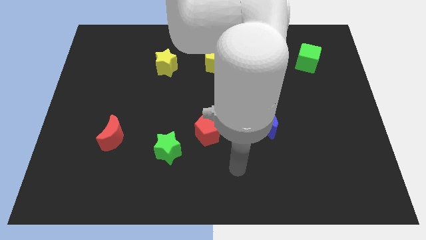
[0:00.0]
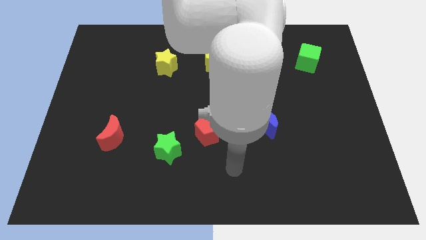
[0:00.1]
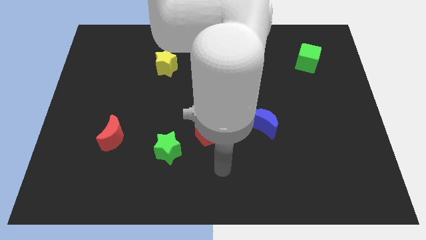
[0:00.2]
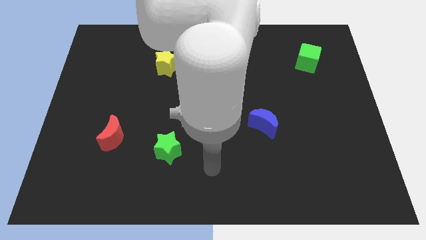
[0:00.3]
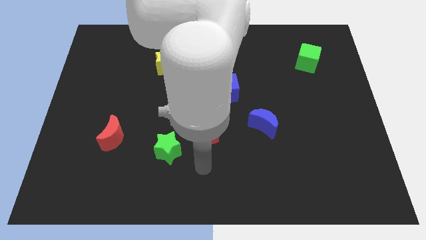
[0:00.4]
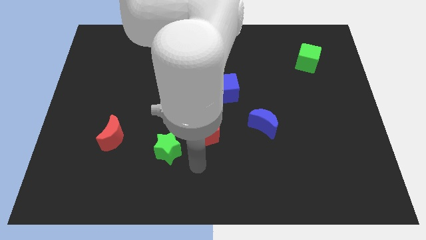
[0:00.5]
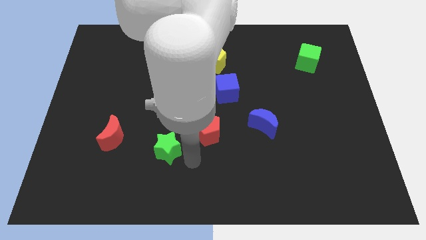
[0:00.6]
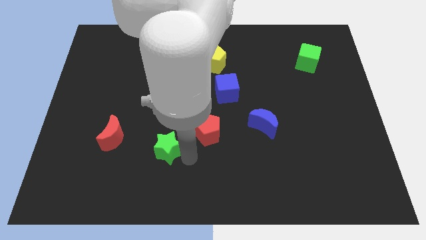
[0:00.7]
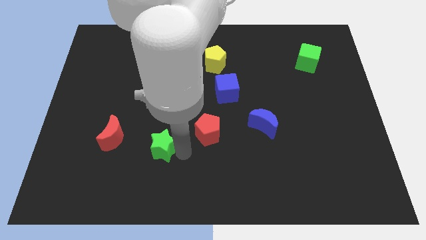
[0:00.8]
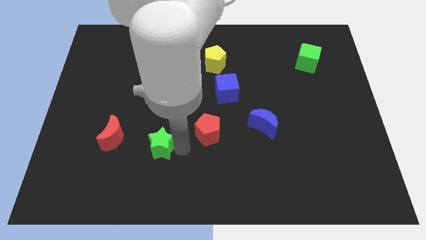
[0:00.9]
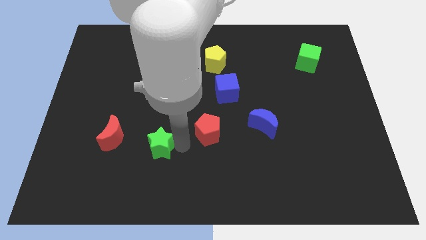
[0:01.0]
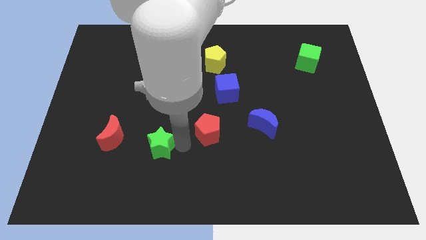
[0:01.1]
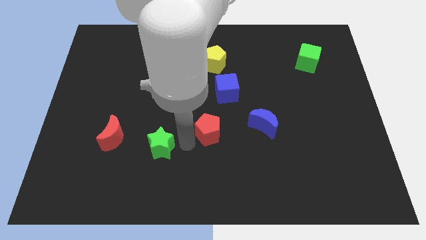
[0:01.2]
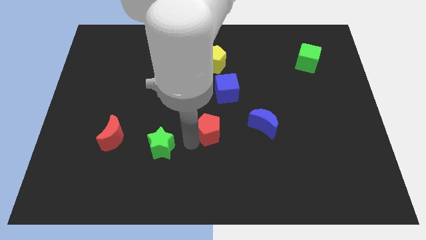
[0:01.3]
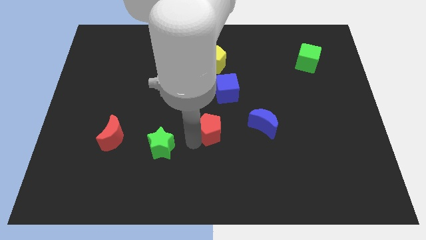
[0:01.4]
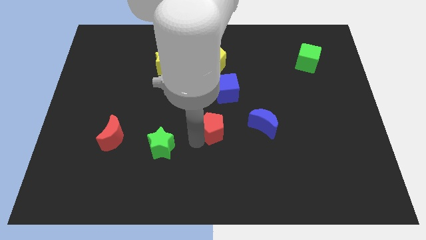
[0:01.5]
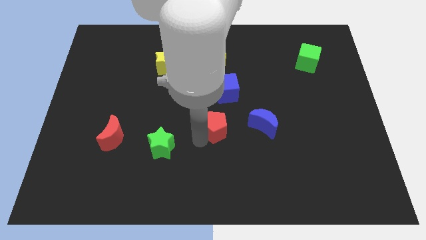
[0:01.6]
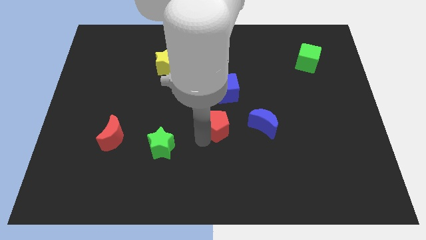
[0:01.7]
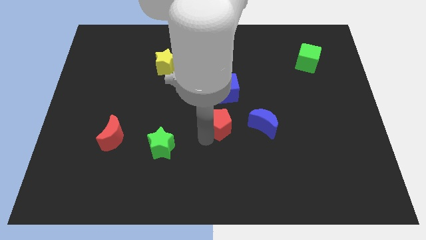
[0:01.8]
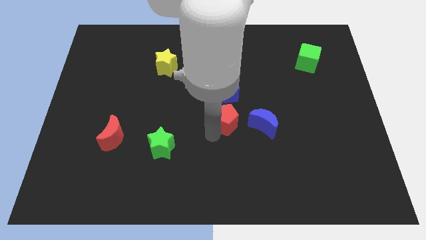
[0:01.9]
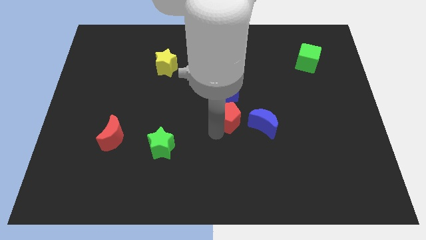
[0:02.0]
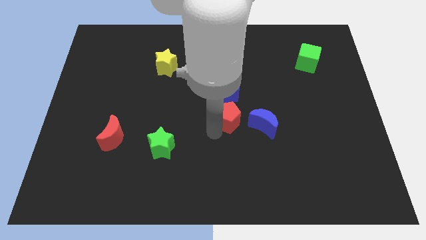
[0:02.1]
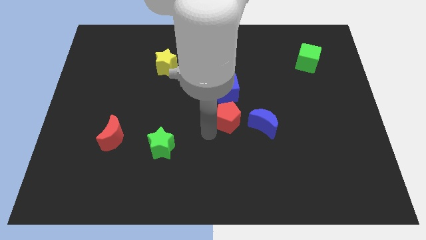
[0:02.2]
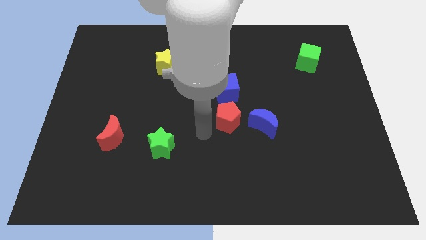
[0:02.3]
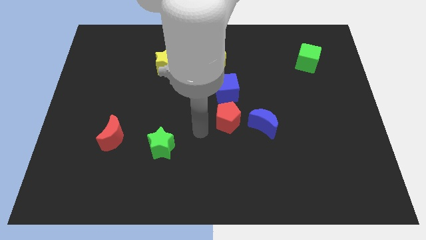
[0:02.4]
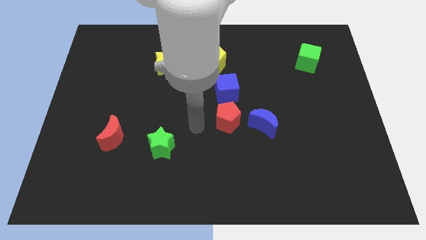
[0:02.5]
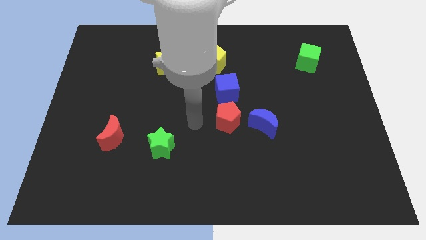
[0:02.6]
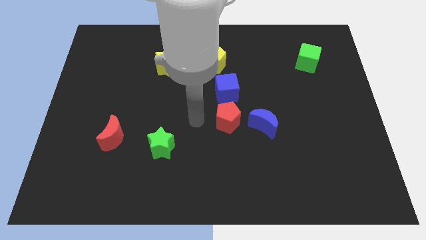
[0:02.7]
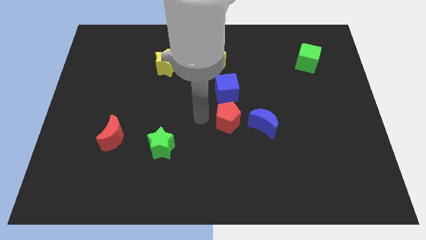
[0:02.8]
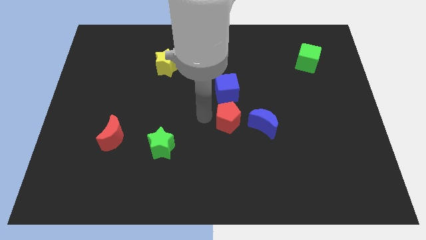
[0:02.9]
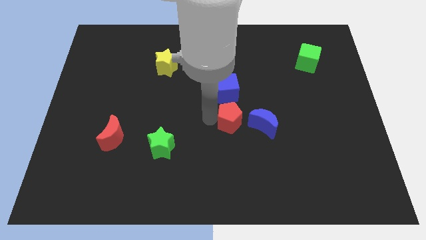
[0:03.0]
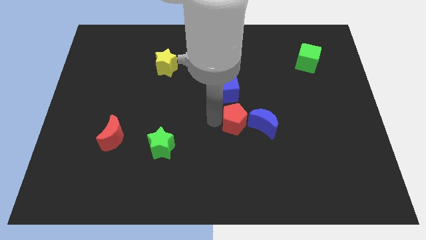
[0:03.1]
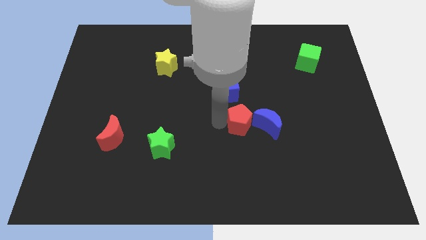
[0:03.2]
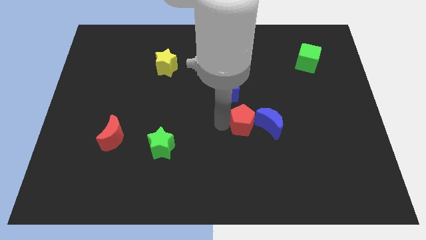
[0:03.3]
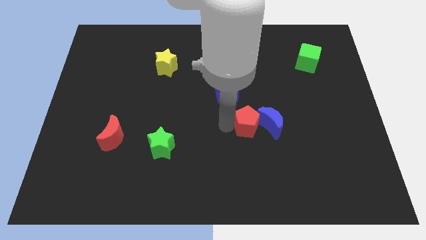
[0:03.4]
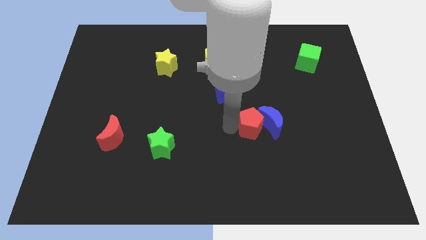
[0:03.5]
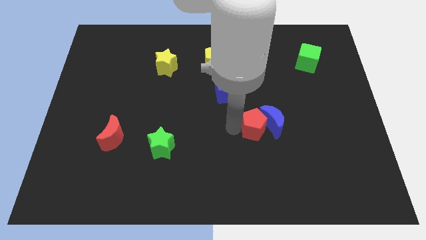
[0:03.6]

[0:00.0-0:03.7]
slide the red pentagon towards the blue moon

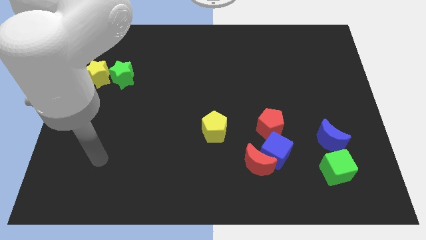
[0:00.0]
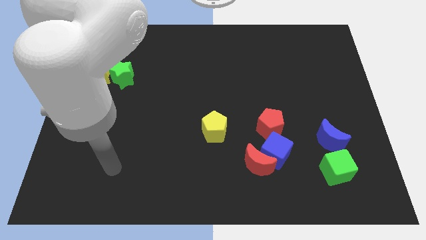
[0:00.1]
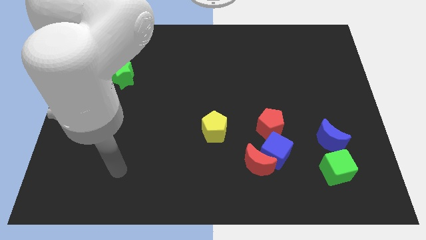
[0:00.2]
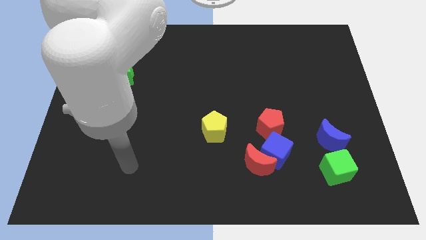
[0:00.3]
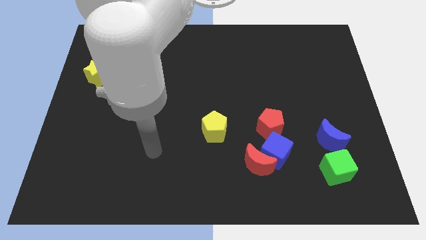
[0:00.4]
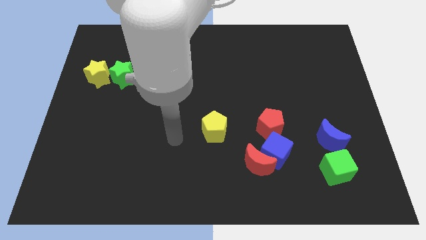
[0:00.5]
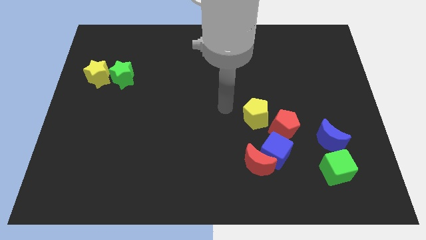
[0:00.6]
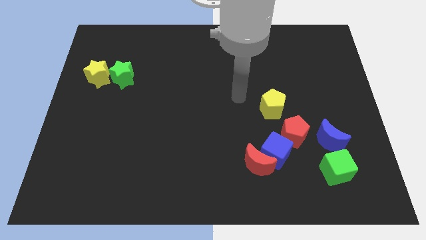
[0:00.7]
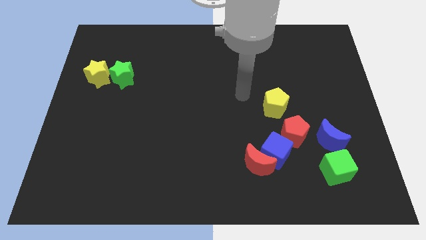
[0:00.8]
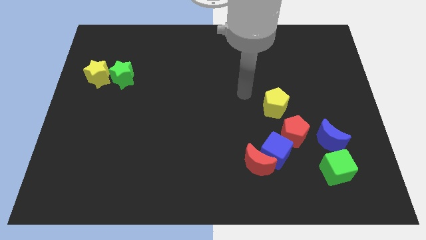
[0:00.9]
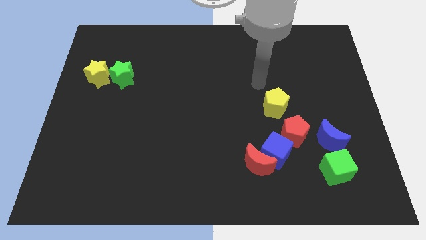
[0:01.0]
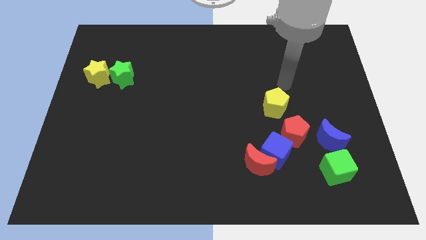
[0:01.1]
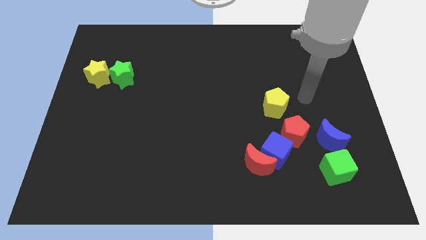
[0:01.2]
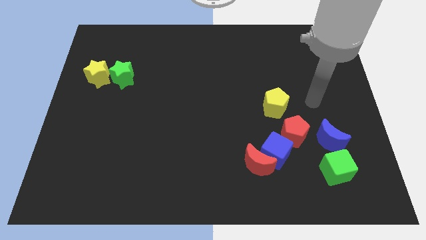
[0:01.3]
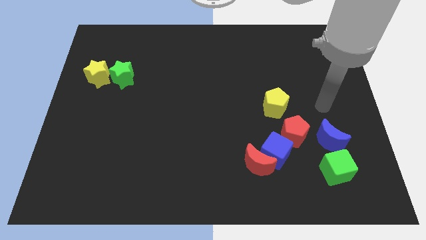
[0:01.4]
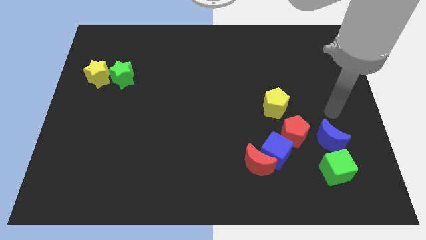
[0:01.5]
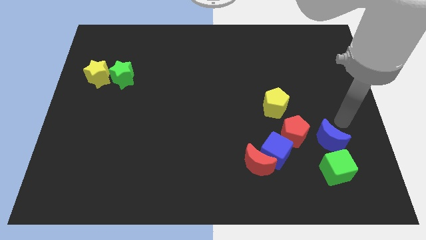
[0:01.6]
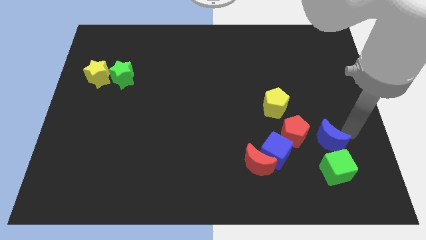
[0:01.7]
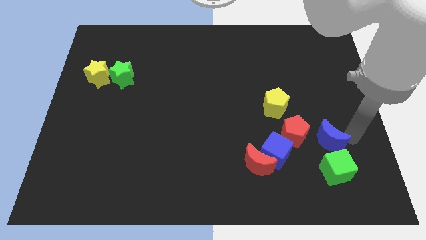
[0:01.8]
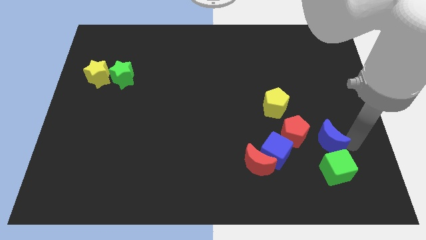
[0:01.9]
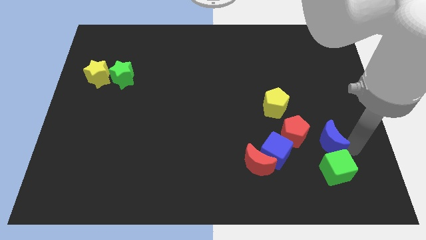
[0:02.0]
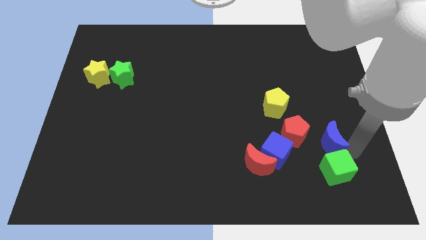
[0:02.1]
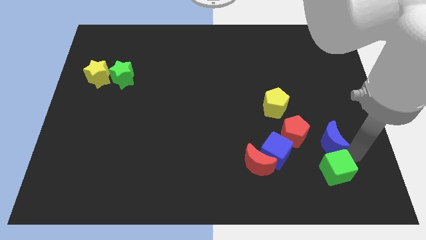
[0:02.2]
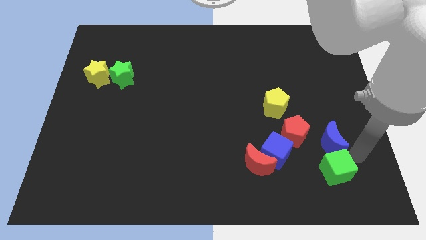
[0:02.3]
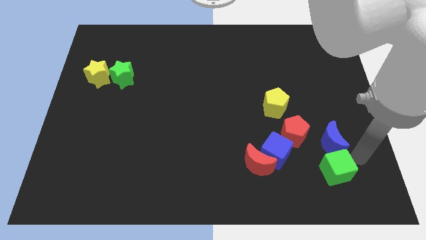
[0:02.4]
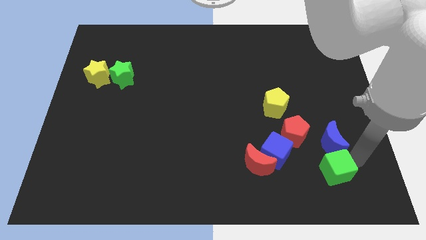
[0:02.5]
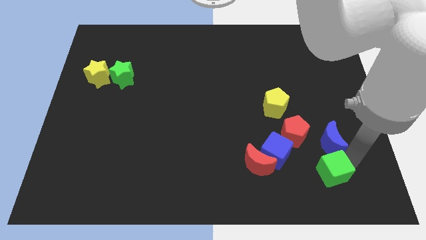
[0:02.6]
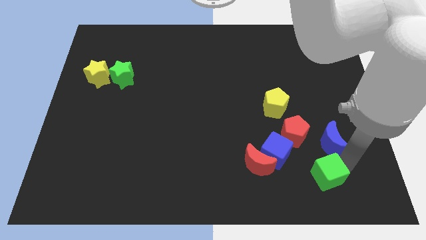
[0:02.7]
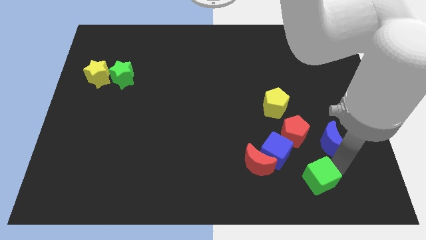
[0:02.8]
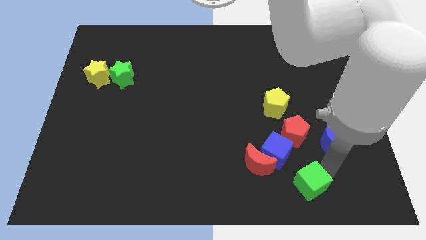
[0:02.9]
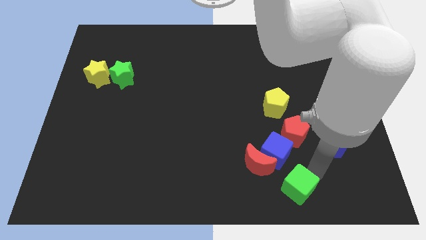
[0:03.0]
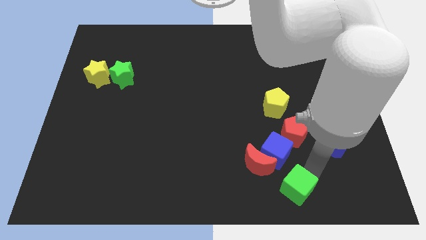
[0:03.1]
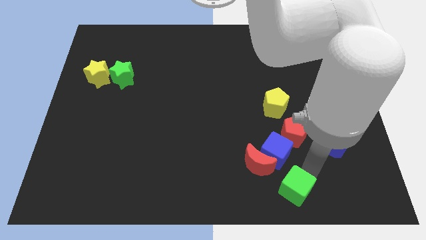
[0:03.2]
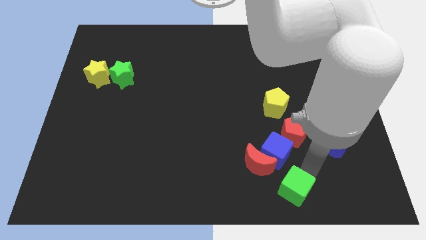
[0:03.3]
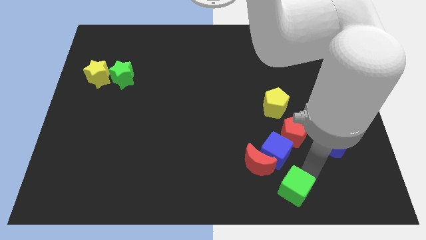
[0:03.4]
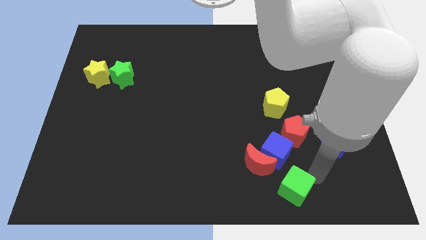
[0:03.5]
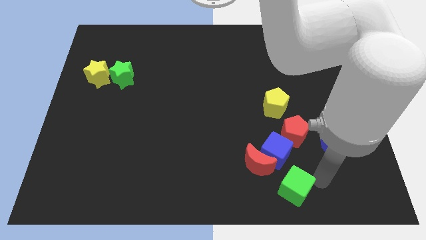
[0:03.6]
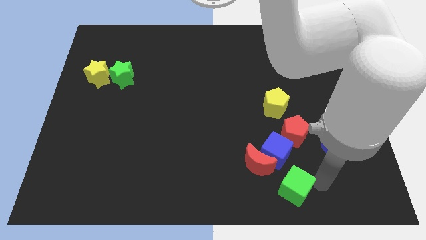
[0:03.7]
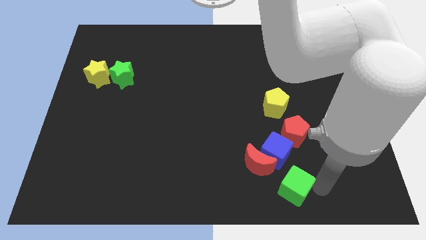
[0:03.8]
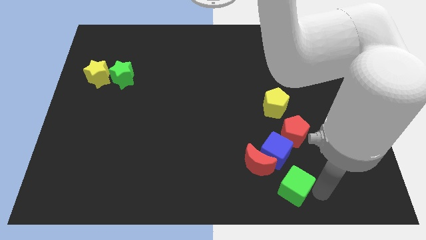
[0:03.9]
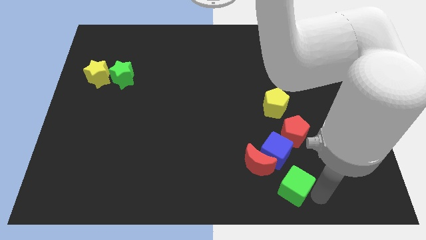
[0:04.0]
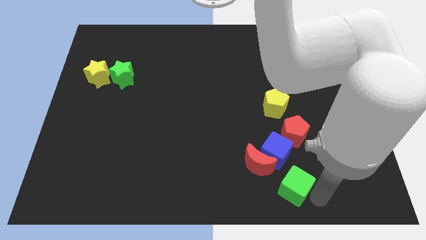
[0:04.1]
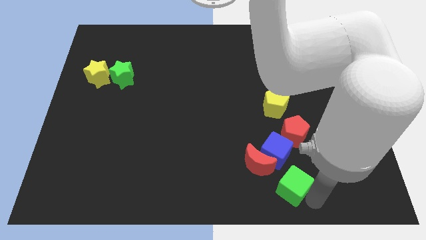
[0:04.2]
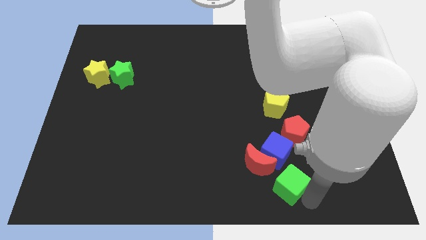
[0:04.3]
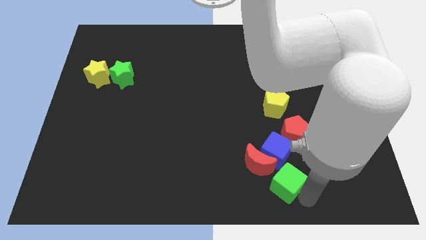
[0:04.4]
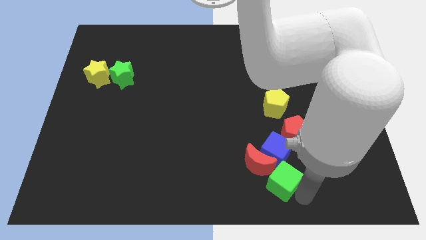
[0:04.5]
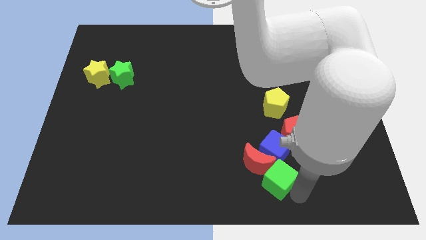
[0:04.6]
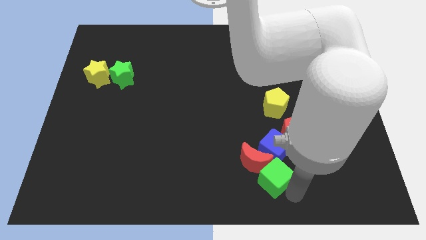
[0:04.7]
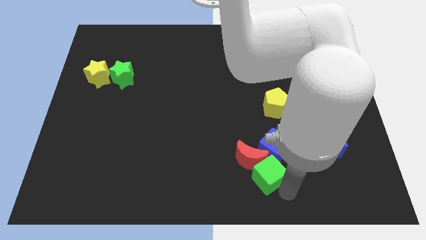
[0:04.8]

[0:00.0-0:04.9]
slide the green cube next to the red moon
